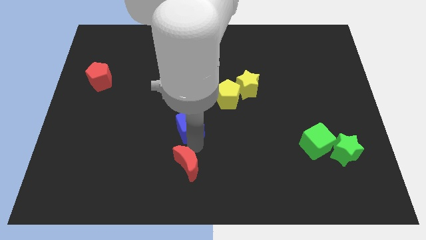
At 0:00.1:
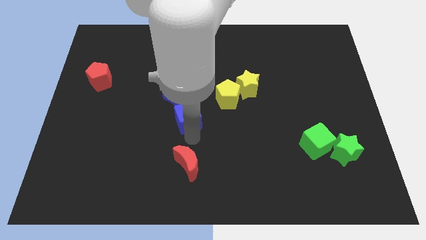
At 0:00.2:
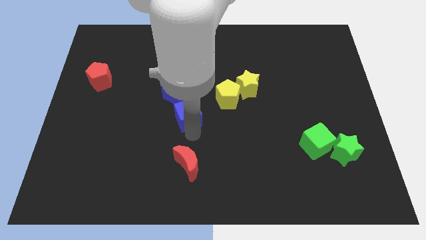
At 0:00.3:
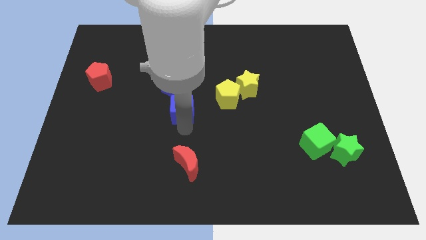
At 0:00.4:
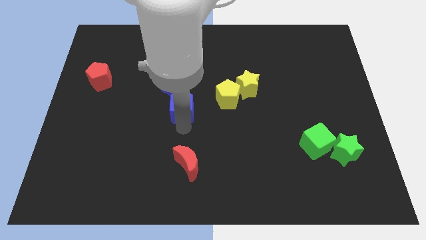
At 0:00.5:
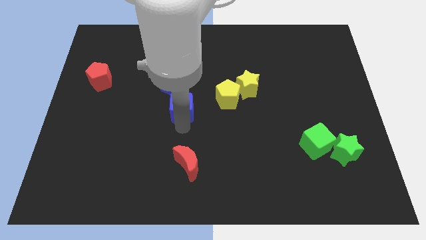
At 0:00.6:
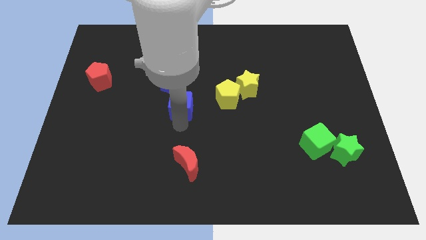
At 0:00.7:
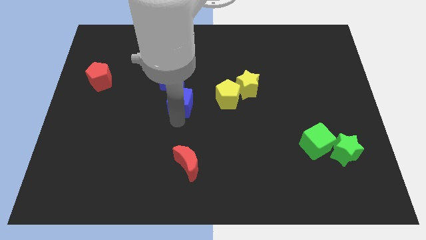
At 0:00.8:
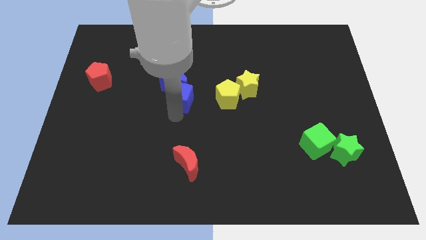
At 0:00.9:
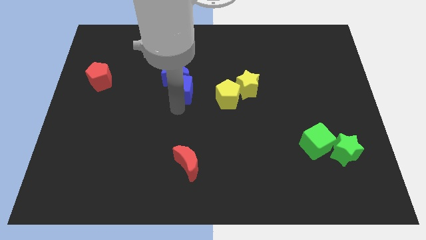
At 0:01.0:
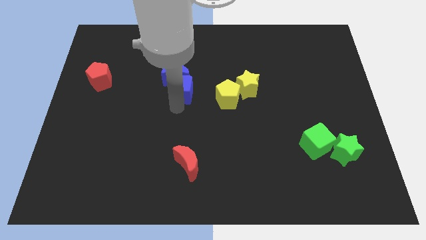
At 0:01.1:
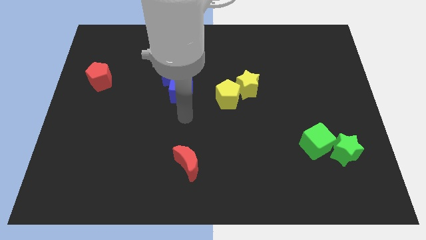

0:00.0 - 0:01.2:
push the blue cube into the blue crescent from the bottom

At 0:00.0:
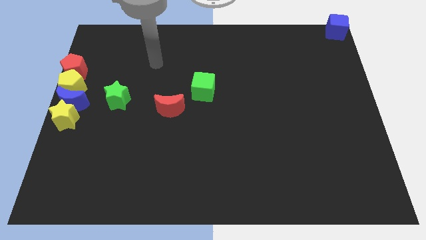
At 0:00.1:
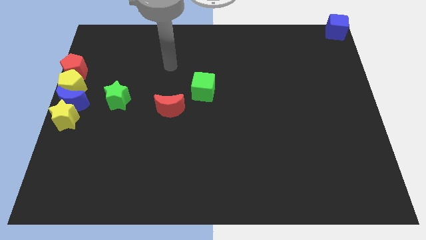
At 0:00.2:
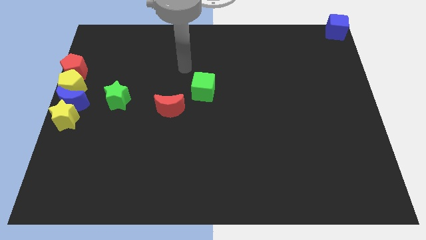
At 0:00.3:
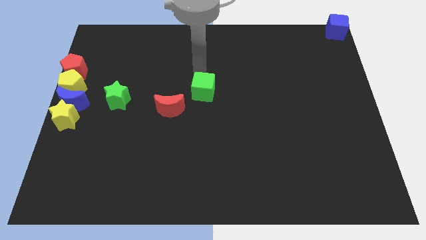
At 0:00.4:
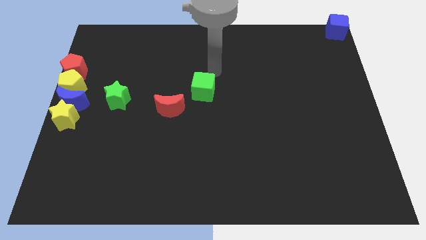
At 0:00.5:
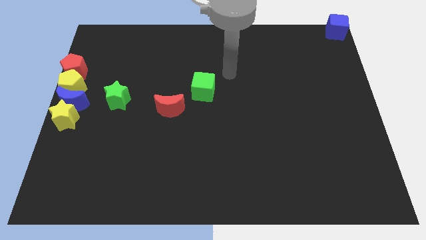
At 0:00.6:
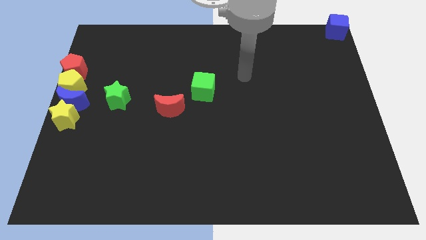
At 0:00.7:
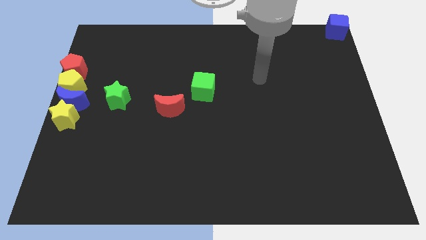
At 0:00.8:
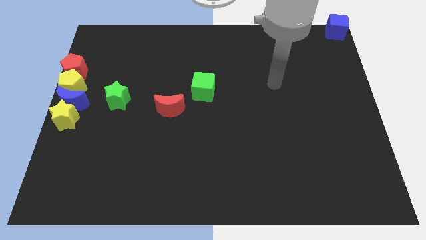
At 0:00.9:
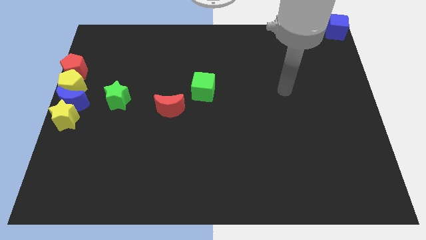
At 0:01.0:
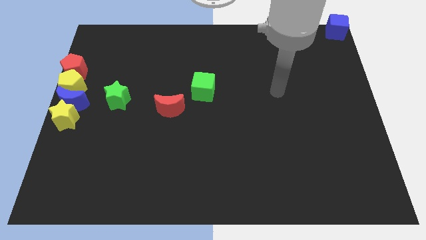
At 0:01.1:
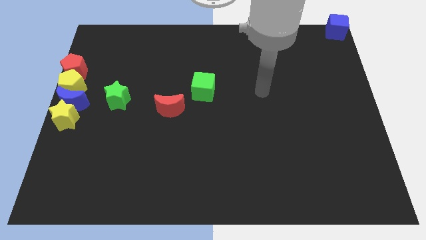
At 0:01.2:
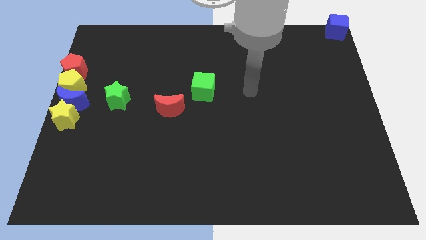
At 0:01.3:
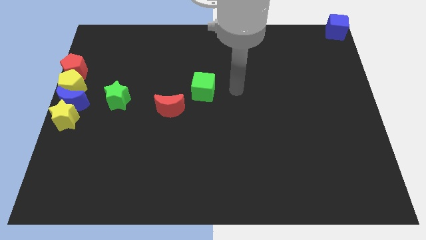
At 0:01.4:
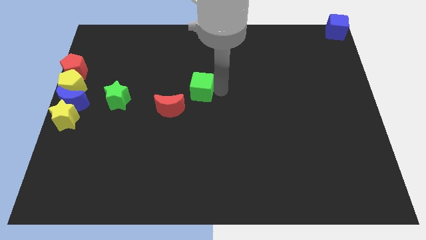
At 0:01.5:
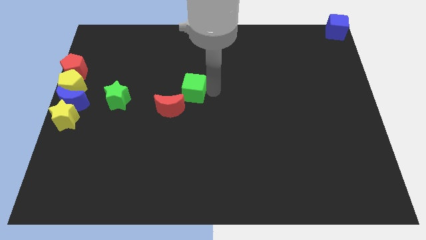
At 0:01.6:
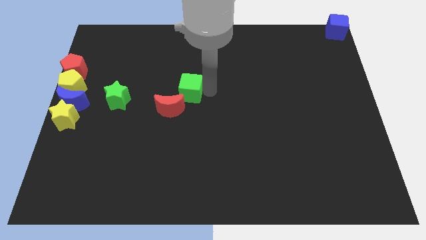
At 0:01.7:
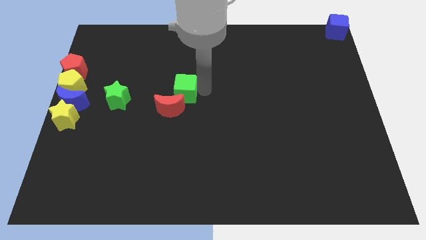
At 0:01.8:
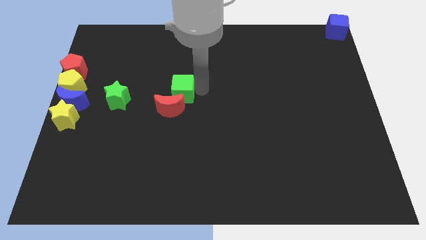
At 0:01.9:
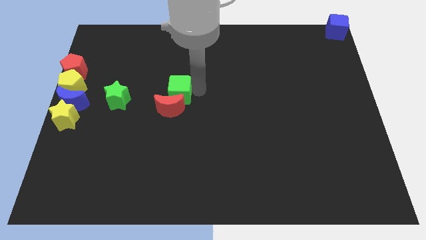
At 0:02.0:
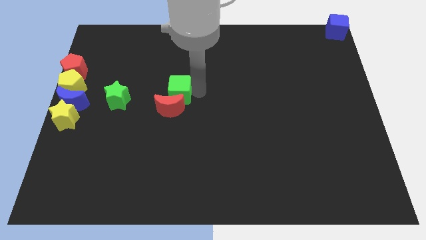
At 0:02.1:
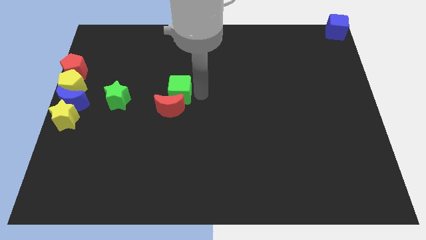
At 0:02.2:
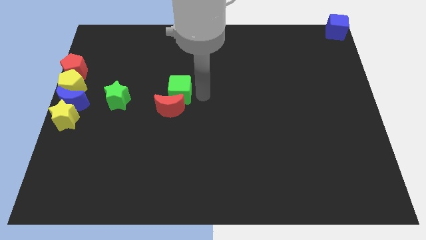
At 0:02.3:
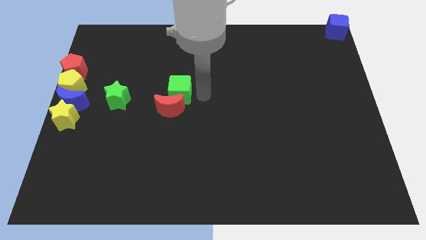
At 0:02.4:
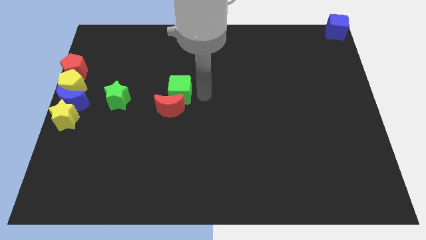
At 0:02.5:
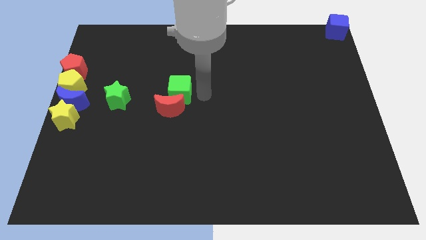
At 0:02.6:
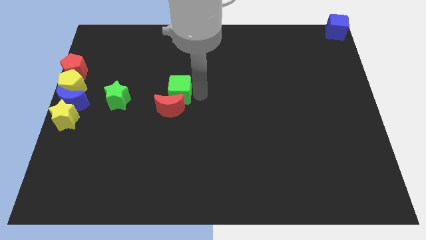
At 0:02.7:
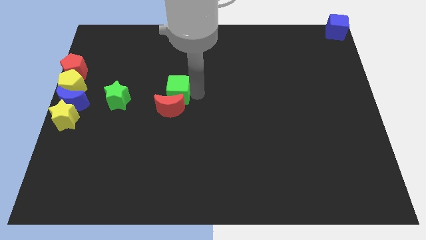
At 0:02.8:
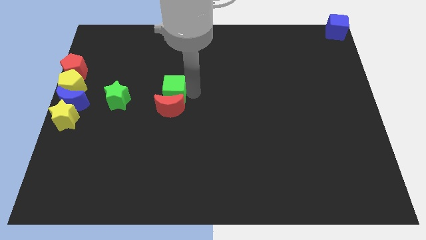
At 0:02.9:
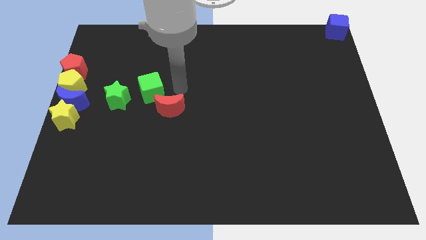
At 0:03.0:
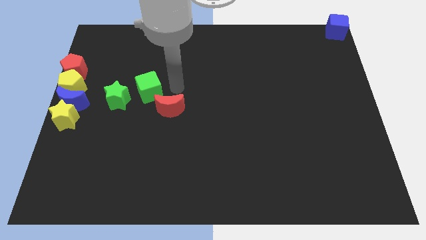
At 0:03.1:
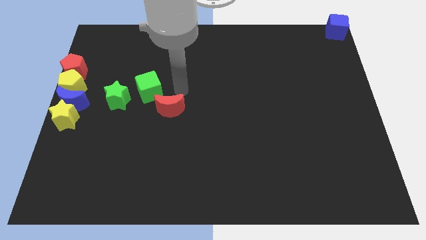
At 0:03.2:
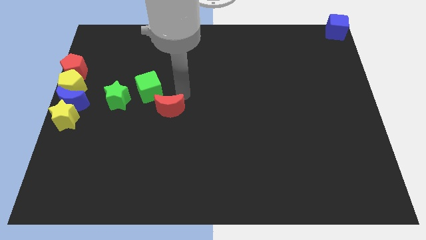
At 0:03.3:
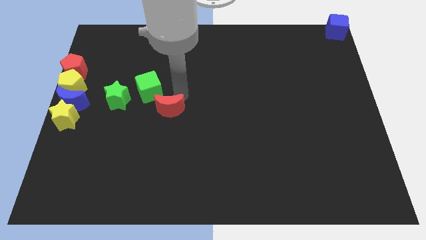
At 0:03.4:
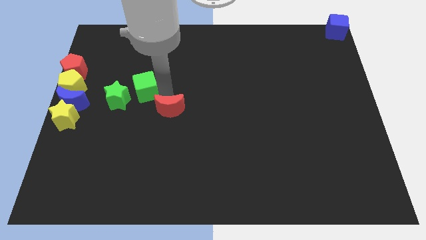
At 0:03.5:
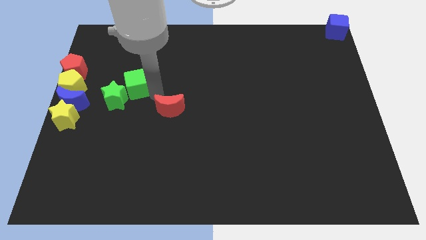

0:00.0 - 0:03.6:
push the green cube into the green star

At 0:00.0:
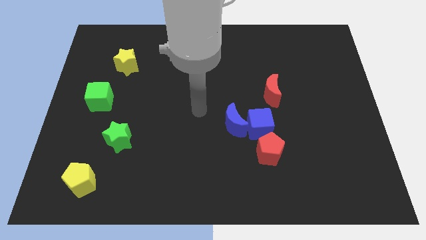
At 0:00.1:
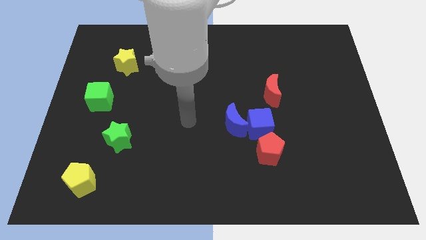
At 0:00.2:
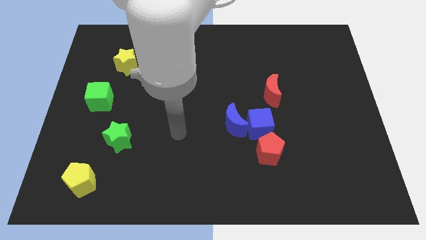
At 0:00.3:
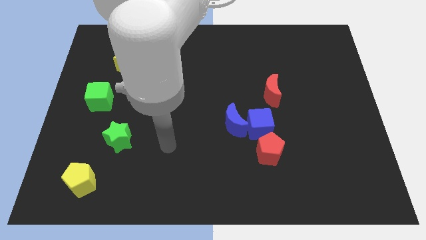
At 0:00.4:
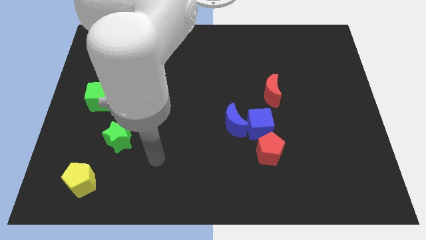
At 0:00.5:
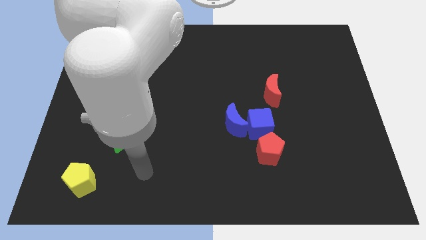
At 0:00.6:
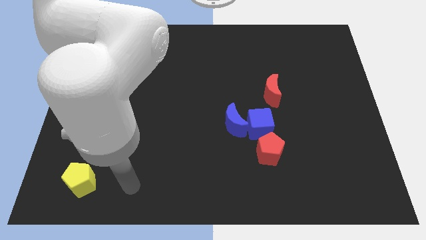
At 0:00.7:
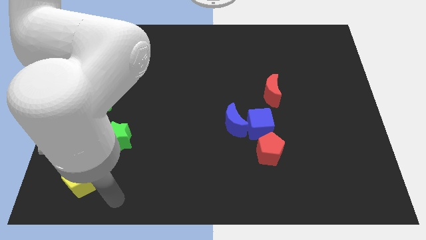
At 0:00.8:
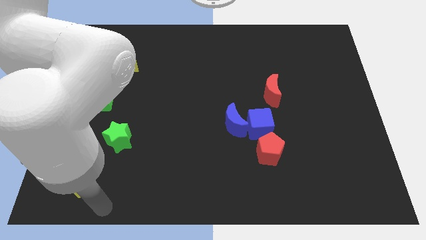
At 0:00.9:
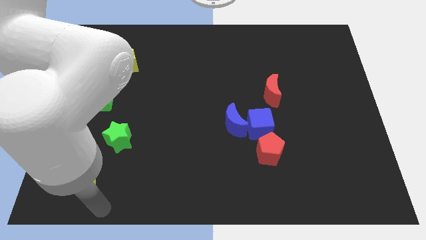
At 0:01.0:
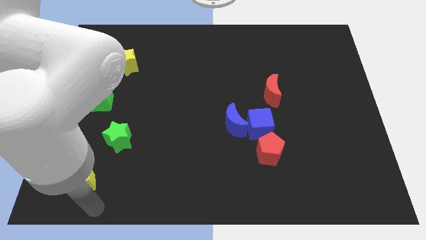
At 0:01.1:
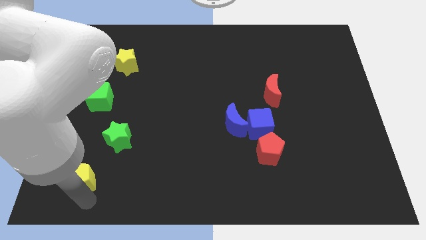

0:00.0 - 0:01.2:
point the arm at the bottom side of the yellow pentagon

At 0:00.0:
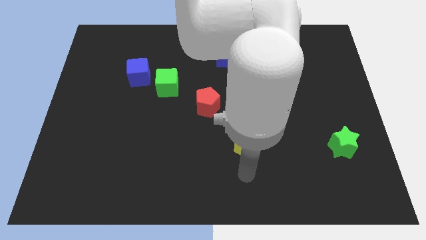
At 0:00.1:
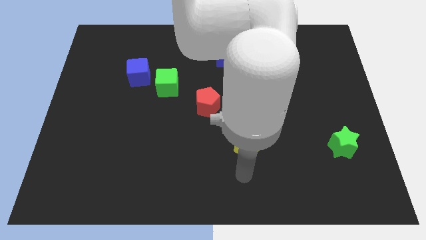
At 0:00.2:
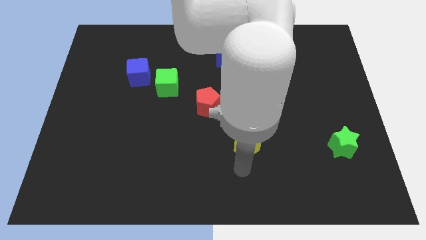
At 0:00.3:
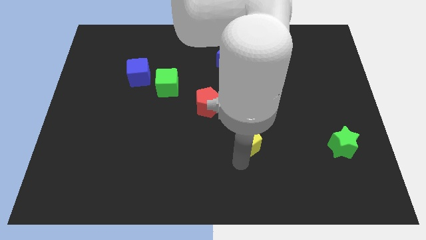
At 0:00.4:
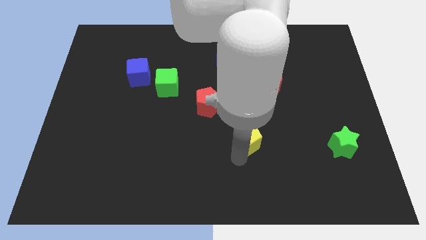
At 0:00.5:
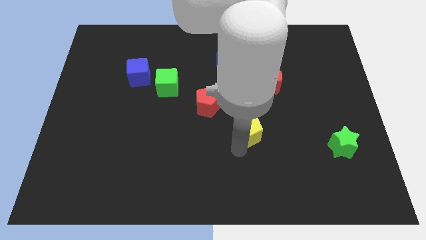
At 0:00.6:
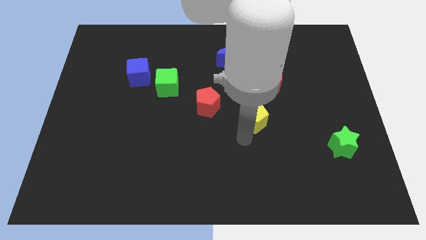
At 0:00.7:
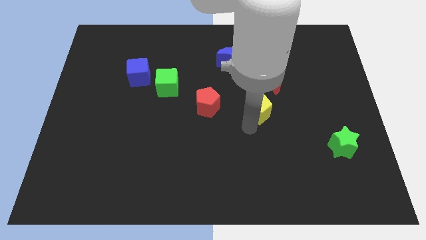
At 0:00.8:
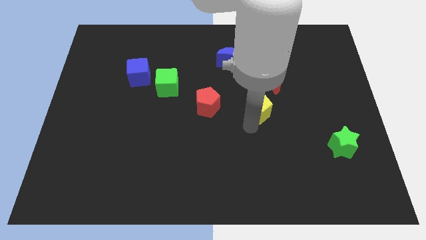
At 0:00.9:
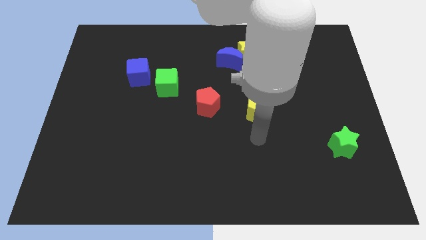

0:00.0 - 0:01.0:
move the yellow pentagon towards the right side of the red pentagon

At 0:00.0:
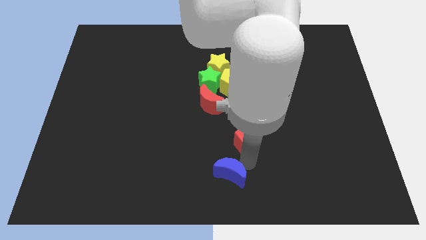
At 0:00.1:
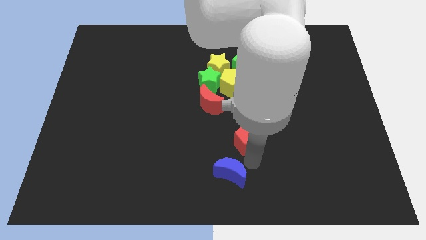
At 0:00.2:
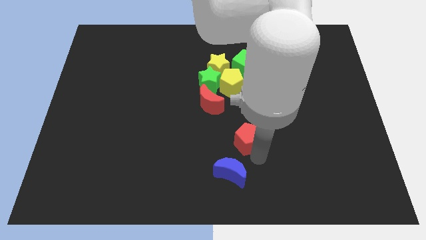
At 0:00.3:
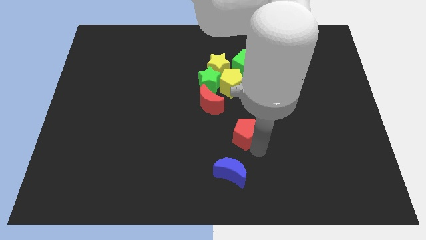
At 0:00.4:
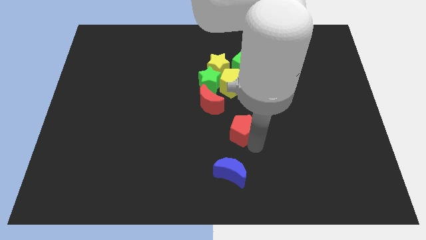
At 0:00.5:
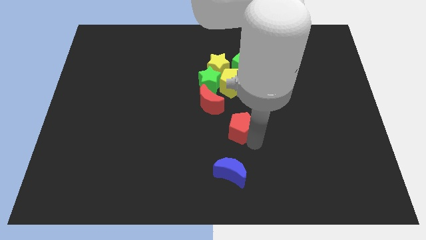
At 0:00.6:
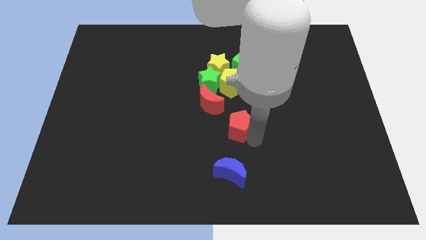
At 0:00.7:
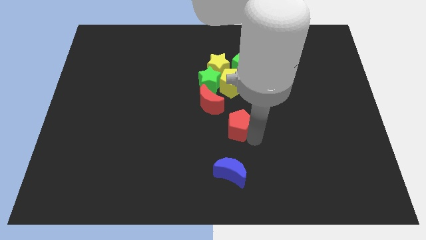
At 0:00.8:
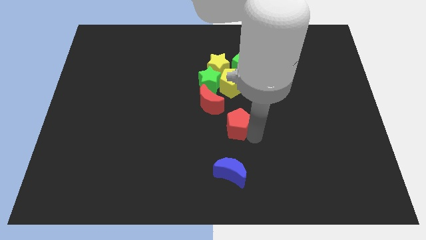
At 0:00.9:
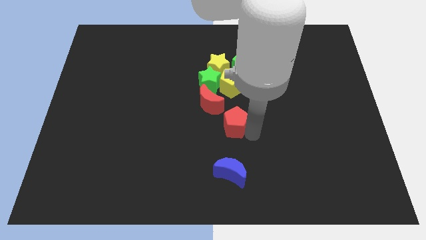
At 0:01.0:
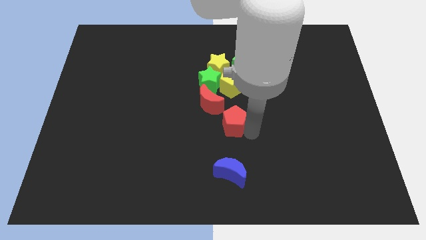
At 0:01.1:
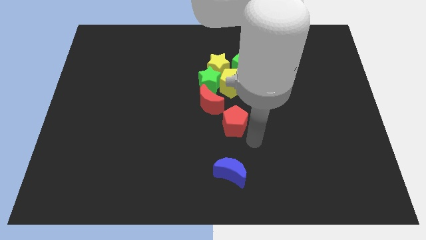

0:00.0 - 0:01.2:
push the red pentagon above the blue crescent

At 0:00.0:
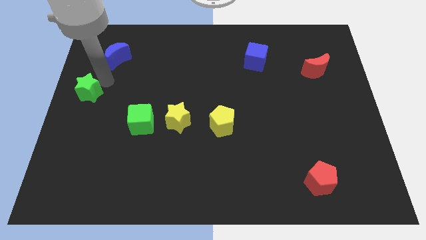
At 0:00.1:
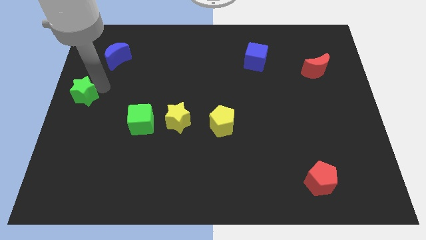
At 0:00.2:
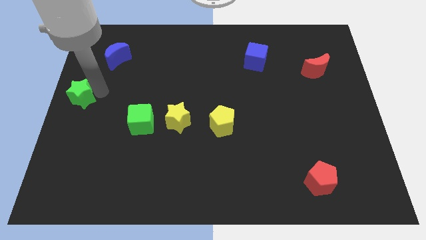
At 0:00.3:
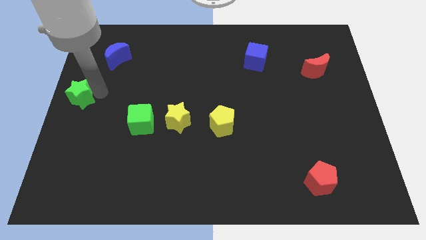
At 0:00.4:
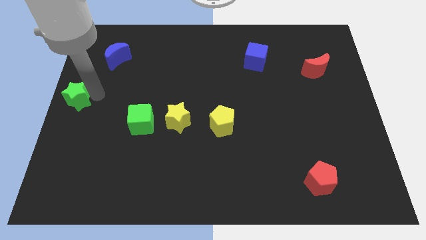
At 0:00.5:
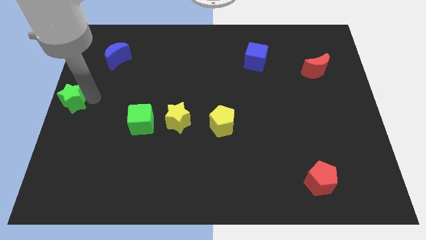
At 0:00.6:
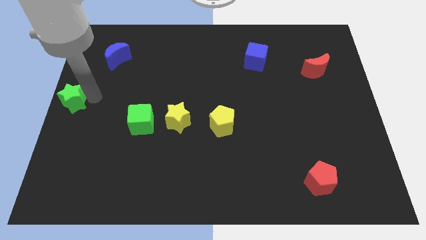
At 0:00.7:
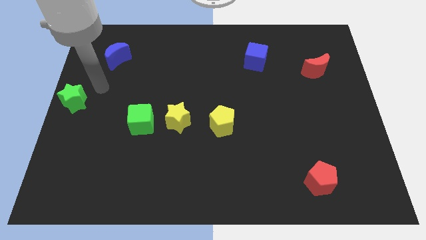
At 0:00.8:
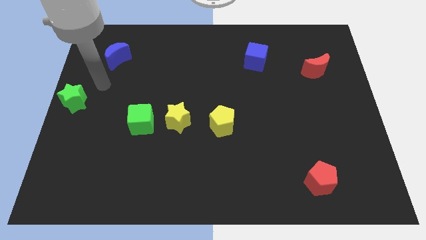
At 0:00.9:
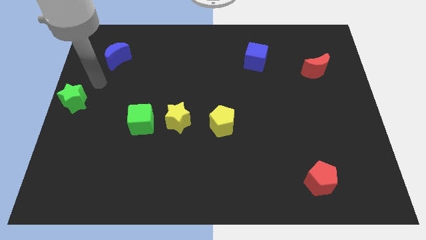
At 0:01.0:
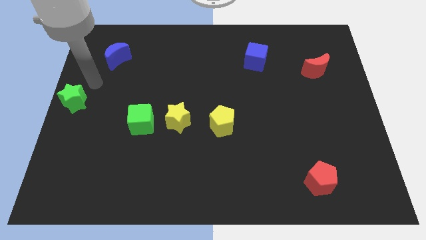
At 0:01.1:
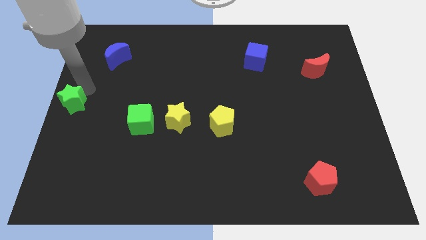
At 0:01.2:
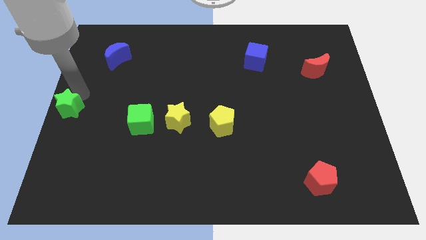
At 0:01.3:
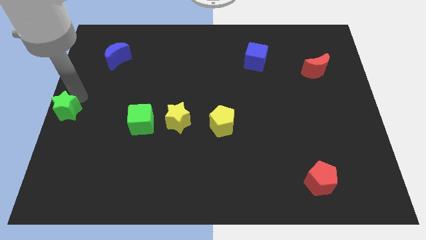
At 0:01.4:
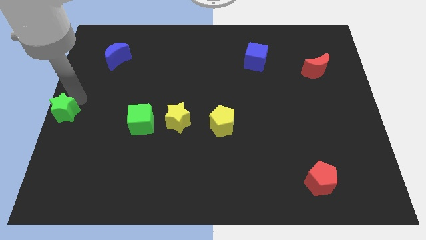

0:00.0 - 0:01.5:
move the green star to the left middle of the board
